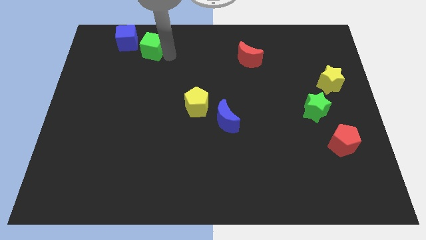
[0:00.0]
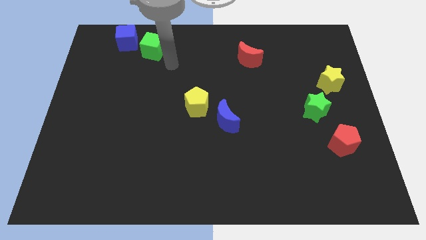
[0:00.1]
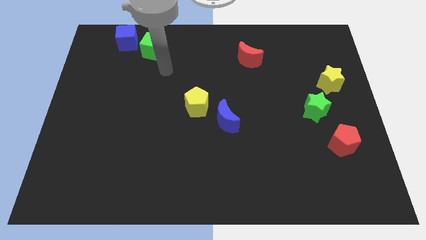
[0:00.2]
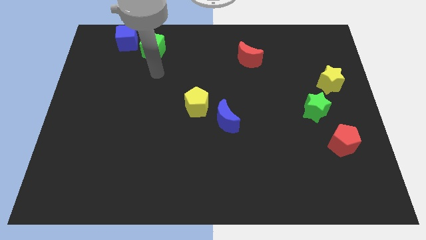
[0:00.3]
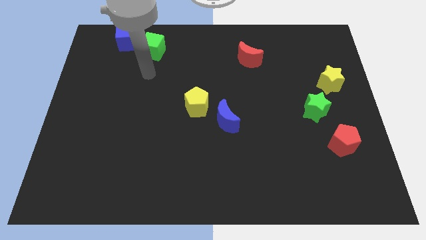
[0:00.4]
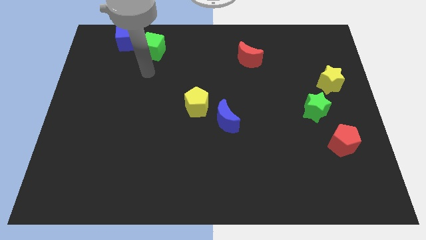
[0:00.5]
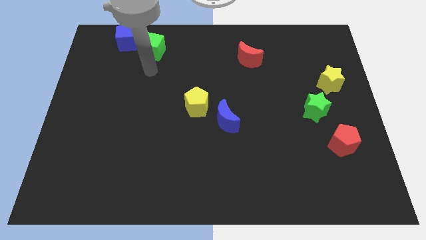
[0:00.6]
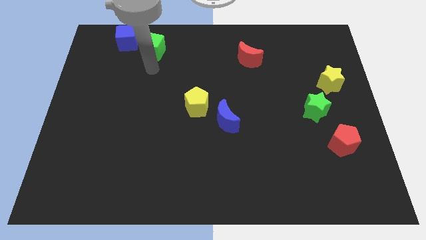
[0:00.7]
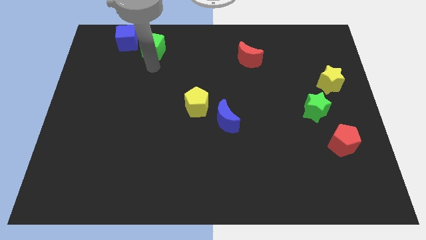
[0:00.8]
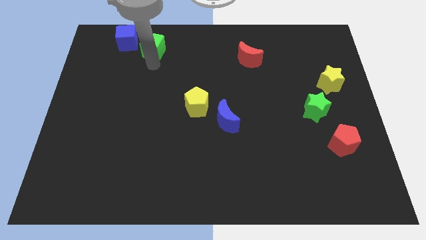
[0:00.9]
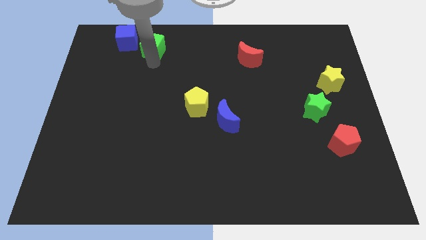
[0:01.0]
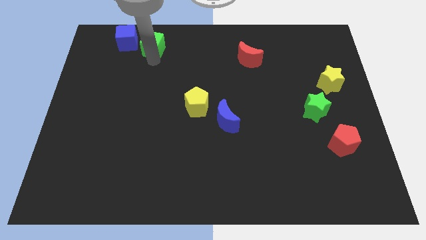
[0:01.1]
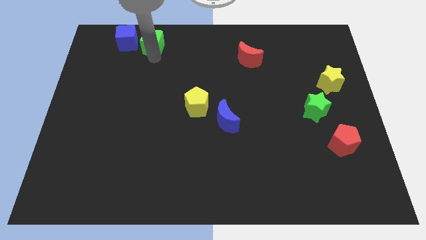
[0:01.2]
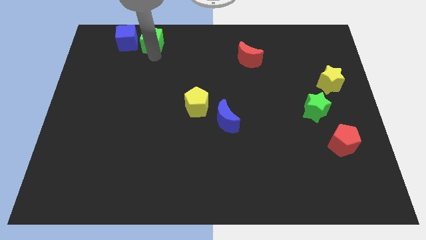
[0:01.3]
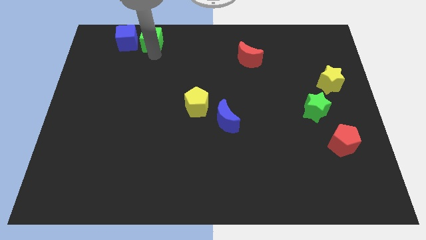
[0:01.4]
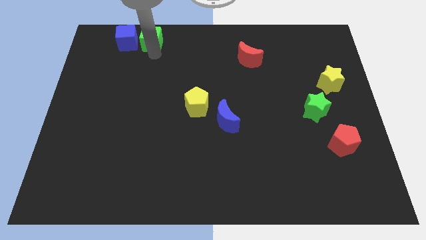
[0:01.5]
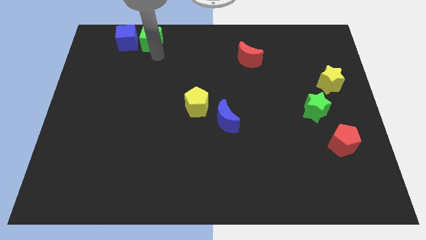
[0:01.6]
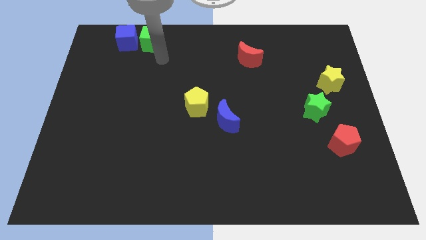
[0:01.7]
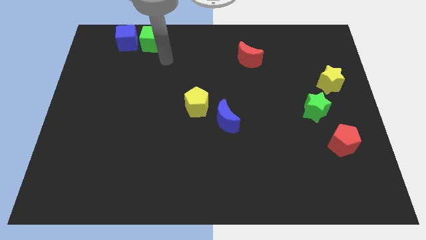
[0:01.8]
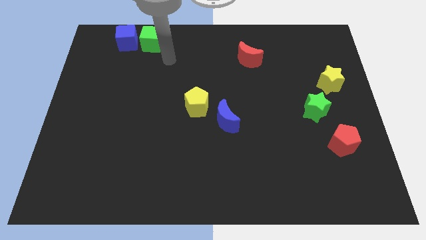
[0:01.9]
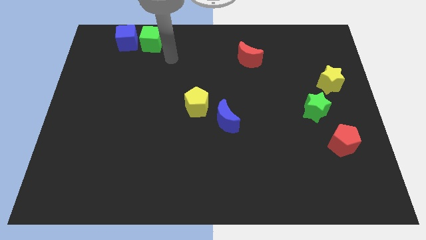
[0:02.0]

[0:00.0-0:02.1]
move green cube to the right of blue cube

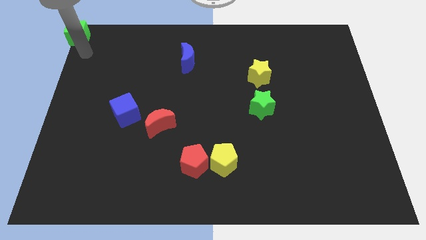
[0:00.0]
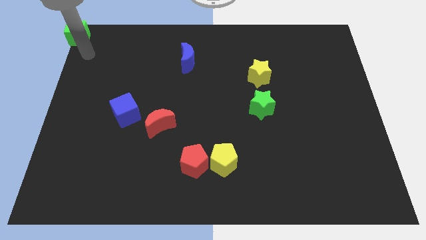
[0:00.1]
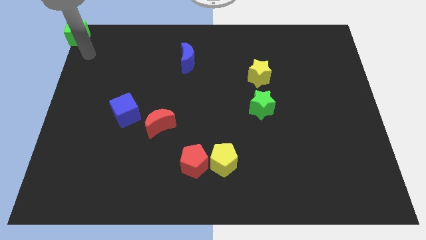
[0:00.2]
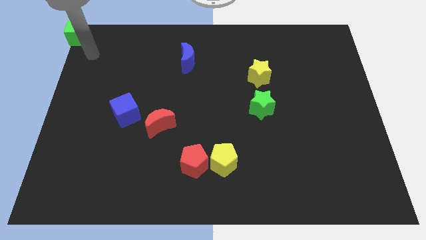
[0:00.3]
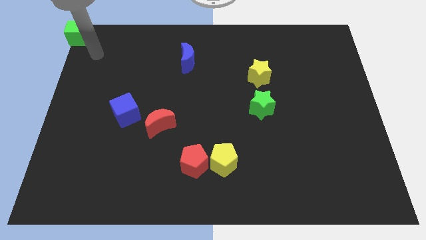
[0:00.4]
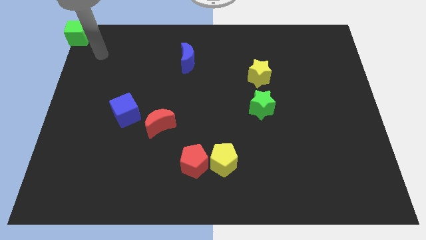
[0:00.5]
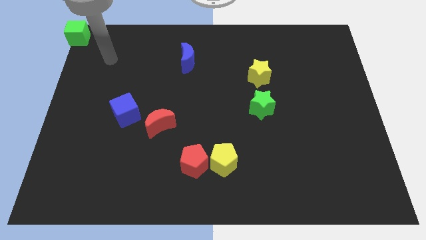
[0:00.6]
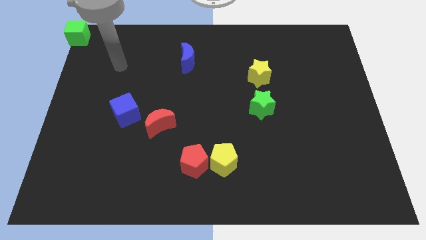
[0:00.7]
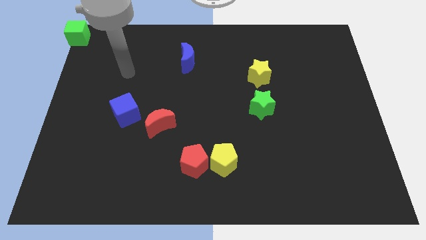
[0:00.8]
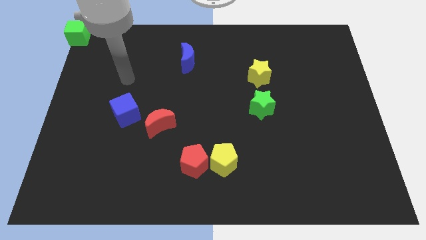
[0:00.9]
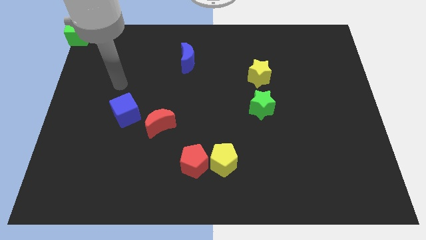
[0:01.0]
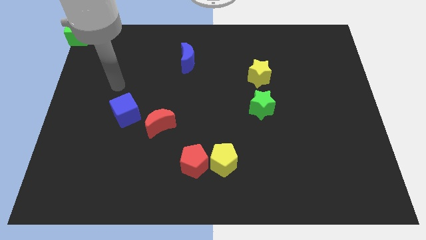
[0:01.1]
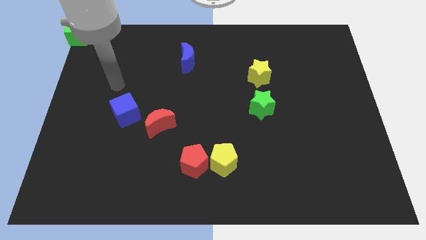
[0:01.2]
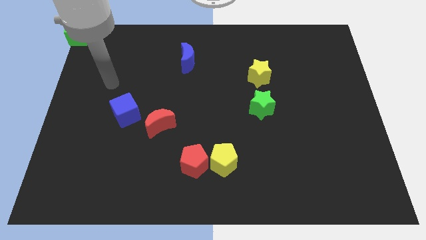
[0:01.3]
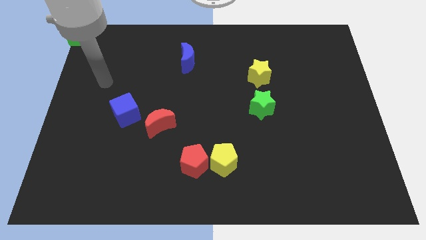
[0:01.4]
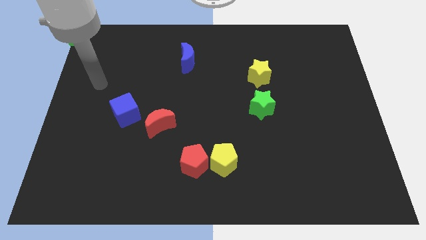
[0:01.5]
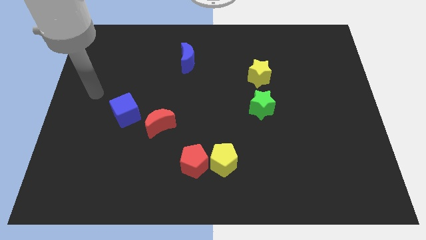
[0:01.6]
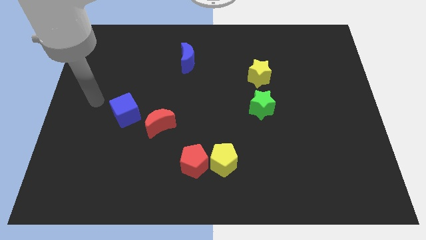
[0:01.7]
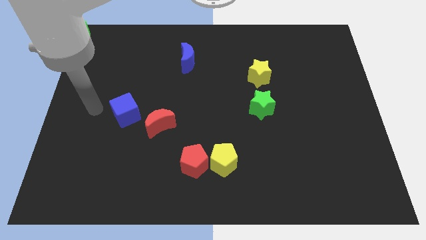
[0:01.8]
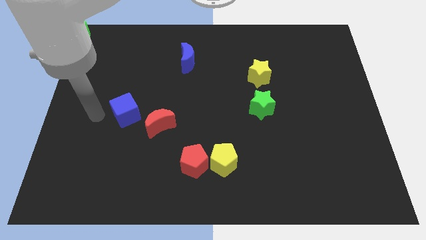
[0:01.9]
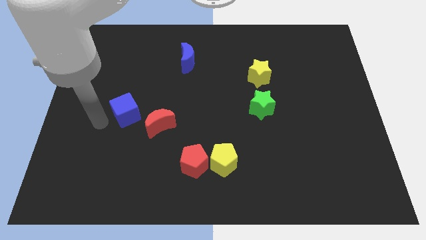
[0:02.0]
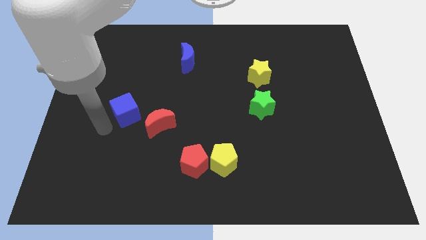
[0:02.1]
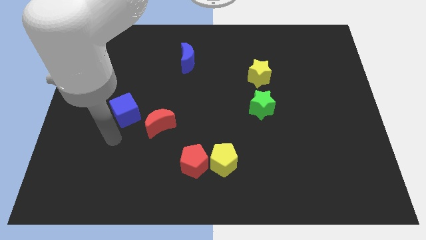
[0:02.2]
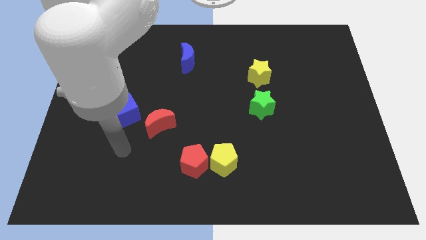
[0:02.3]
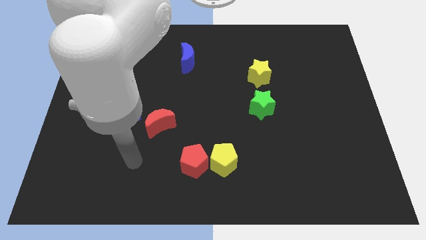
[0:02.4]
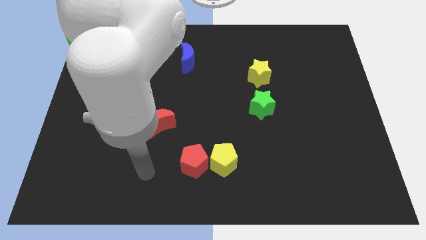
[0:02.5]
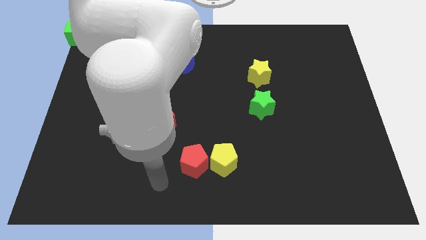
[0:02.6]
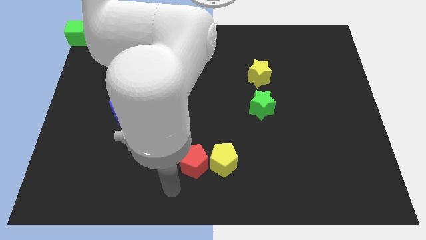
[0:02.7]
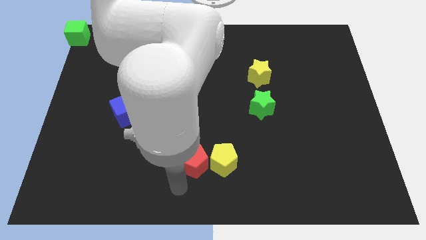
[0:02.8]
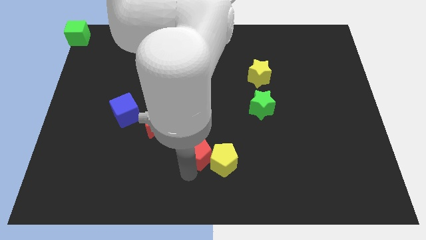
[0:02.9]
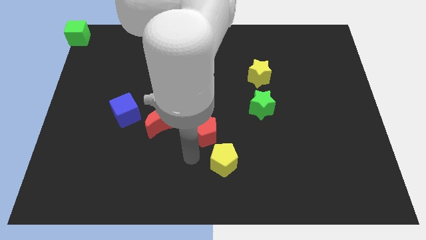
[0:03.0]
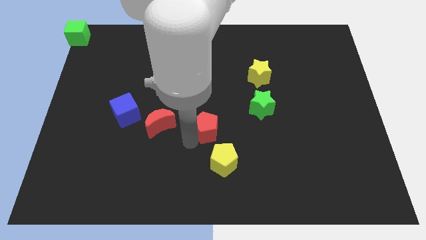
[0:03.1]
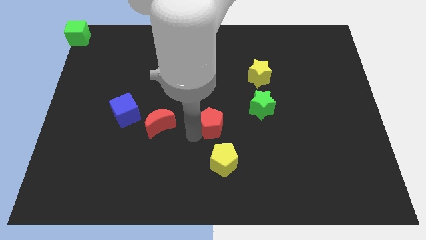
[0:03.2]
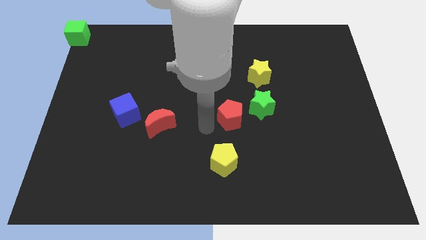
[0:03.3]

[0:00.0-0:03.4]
push red pentagon above yellow pentagon

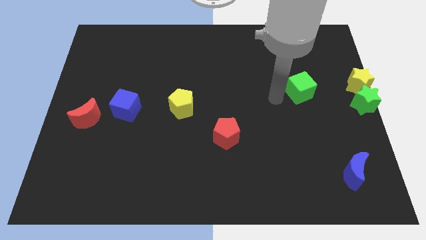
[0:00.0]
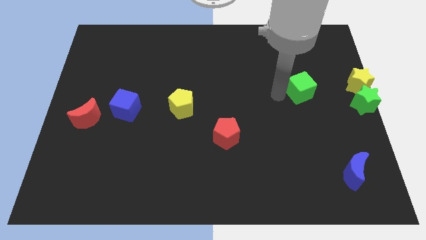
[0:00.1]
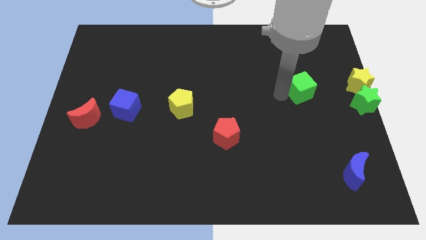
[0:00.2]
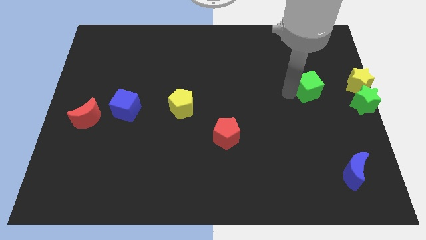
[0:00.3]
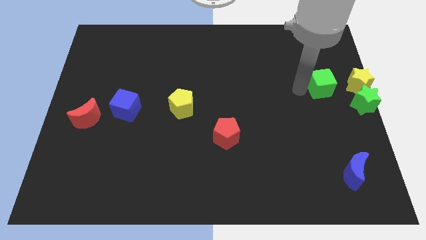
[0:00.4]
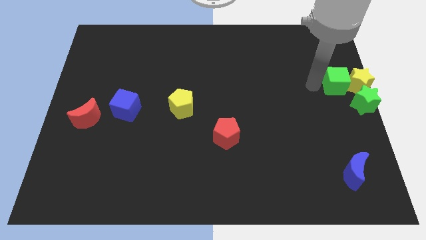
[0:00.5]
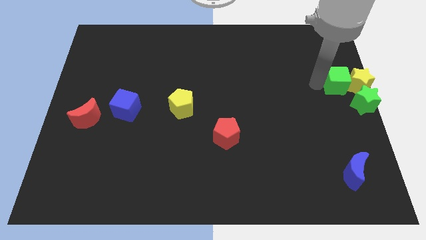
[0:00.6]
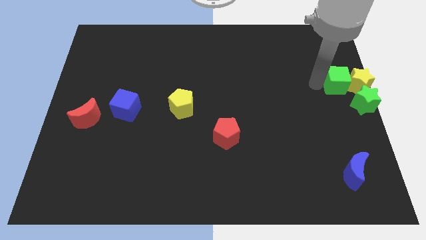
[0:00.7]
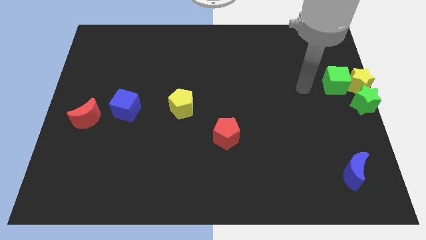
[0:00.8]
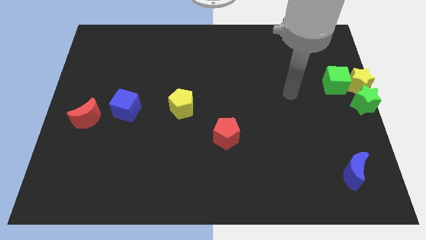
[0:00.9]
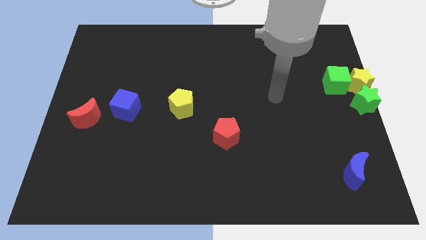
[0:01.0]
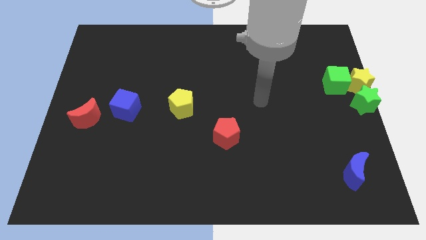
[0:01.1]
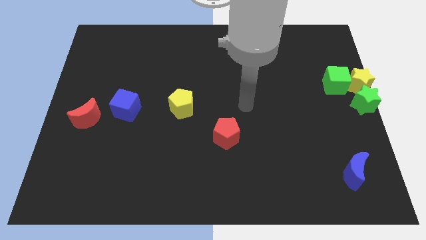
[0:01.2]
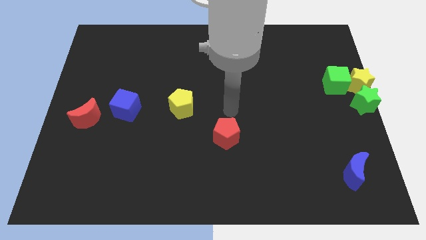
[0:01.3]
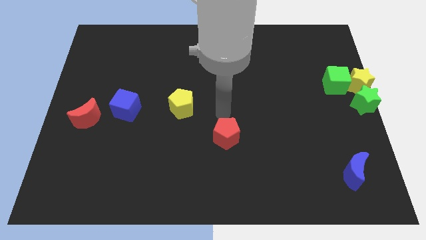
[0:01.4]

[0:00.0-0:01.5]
push the green cube to the left of the yellow star

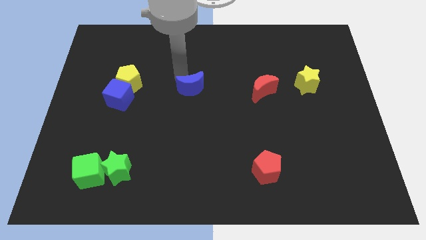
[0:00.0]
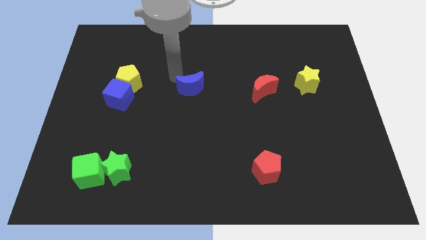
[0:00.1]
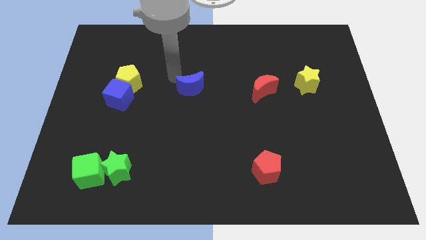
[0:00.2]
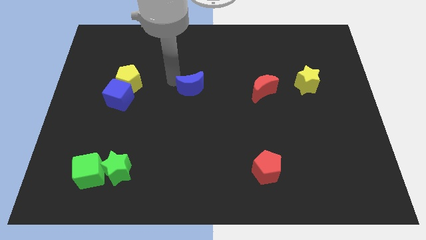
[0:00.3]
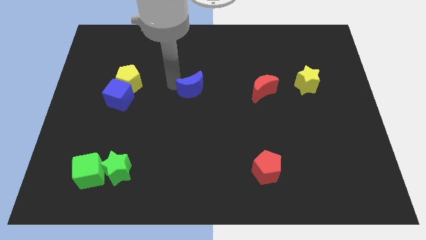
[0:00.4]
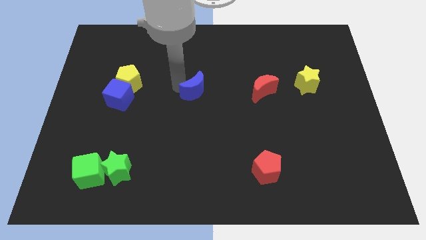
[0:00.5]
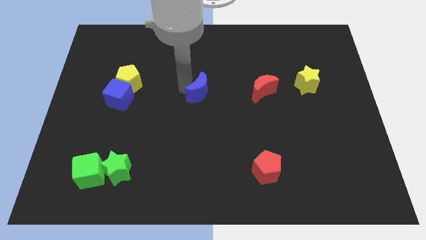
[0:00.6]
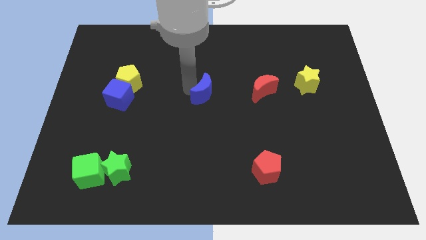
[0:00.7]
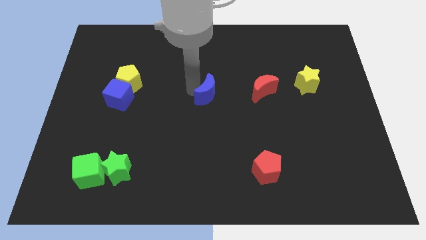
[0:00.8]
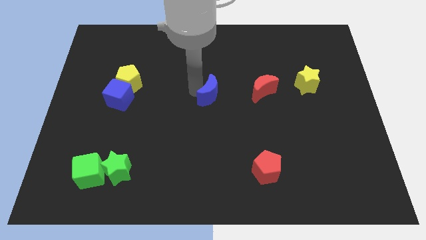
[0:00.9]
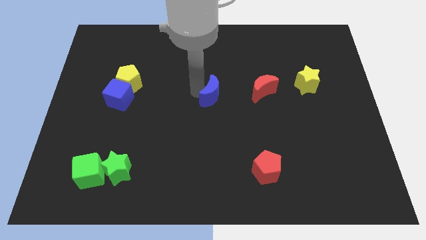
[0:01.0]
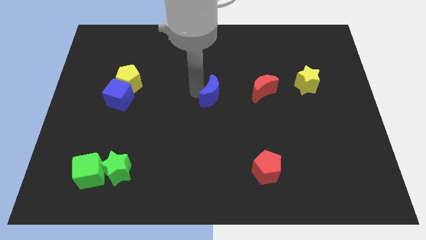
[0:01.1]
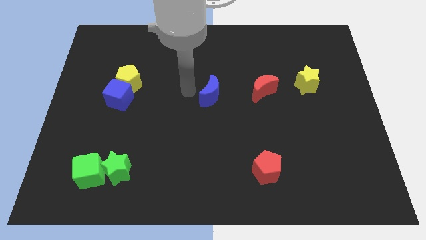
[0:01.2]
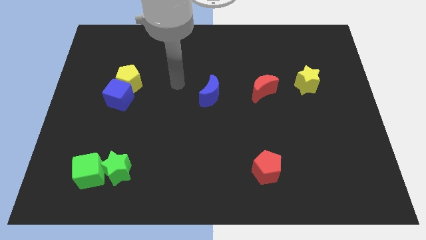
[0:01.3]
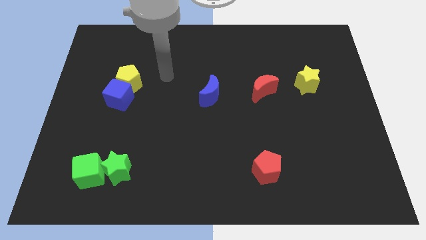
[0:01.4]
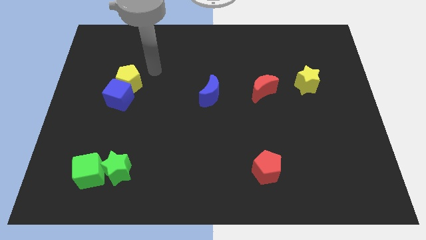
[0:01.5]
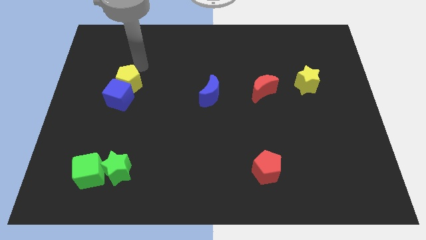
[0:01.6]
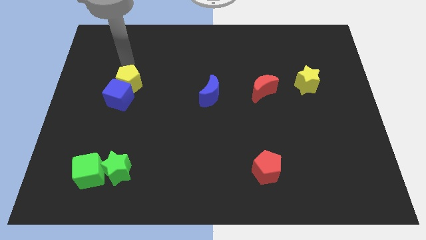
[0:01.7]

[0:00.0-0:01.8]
move the blue crescent to the center of the board

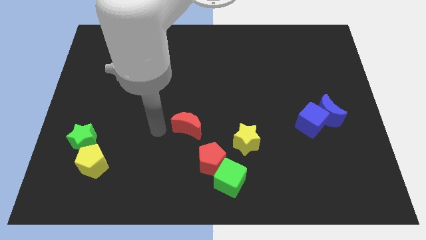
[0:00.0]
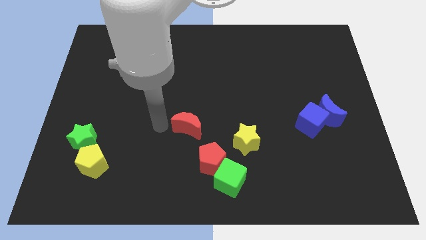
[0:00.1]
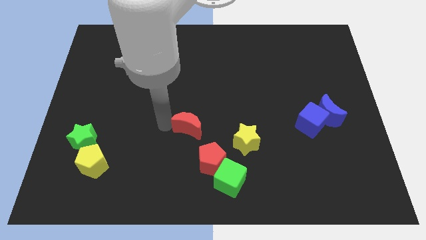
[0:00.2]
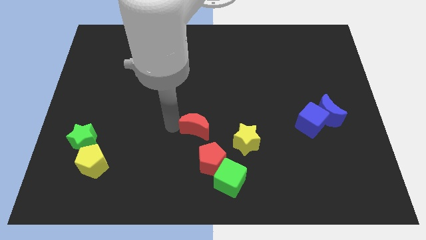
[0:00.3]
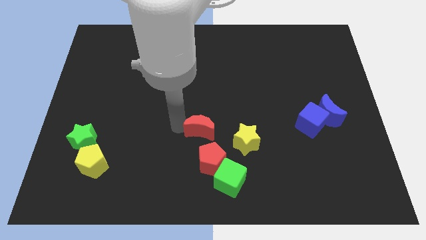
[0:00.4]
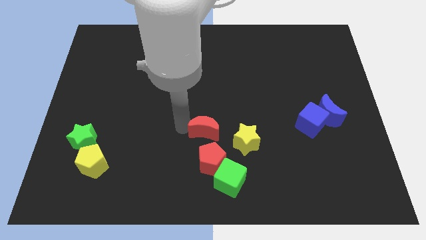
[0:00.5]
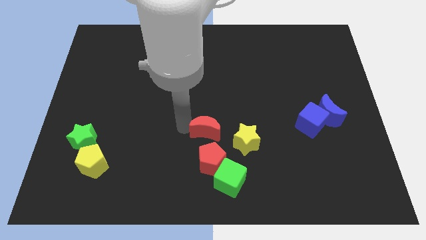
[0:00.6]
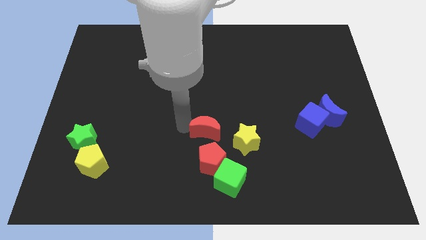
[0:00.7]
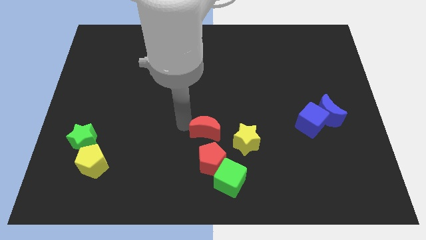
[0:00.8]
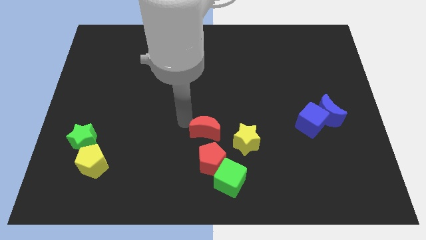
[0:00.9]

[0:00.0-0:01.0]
place red moon above red pentagon
